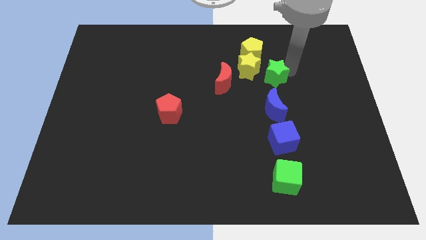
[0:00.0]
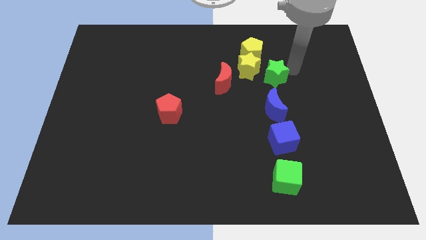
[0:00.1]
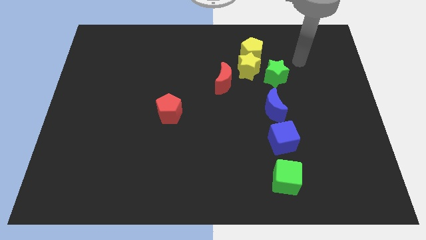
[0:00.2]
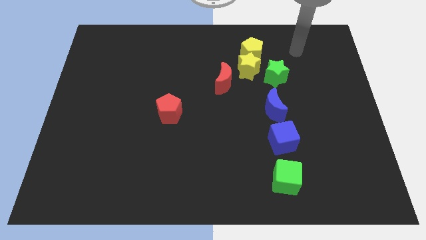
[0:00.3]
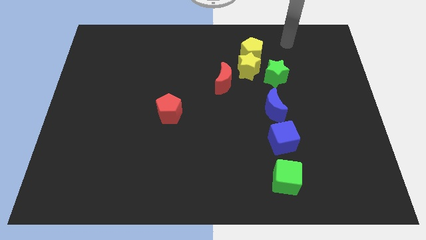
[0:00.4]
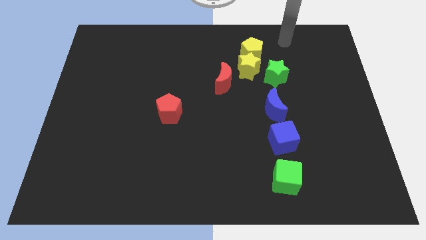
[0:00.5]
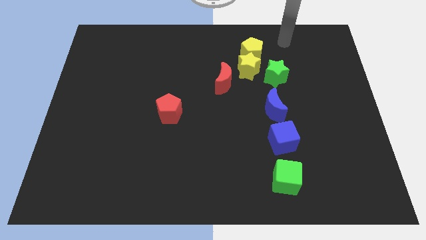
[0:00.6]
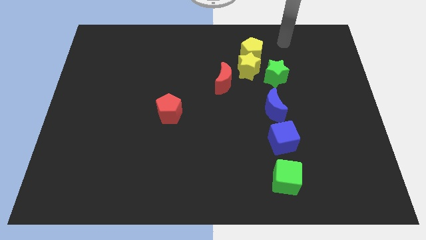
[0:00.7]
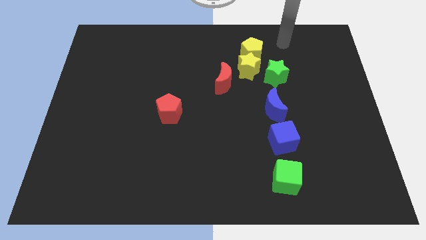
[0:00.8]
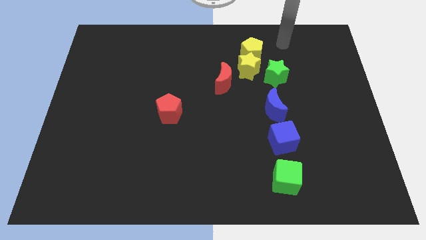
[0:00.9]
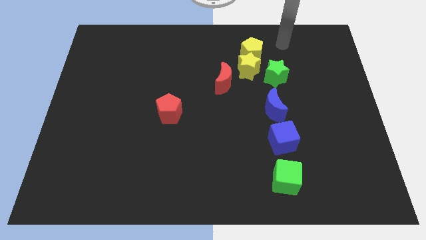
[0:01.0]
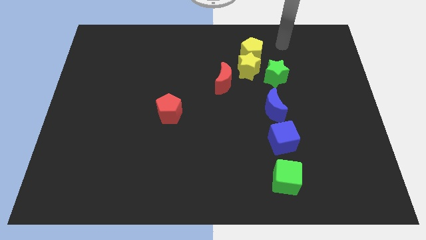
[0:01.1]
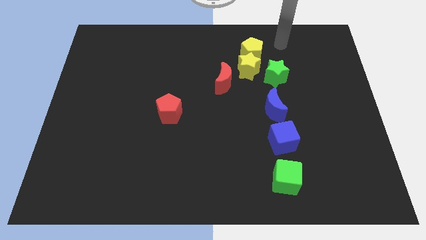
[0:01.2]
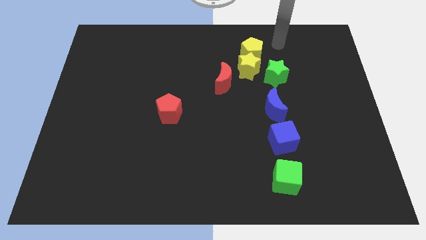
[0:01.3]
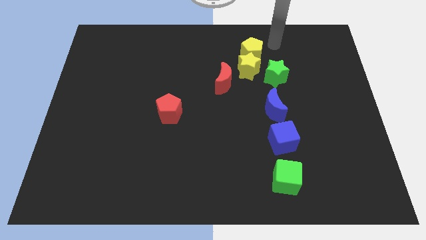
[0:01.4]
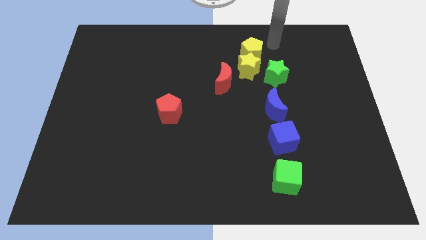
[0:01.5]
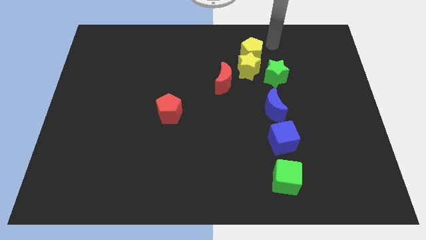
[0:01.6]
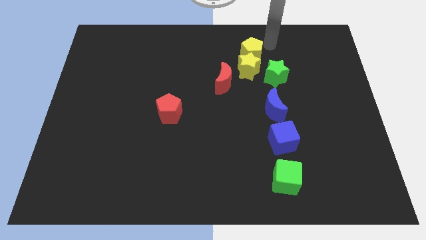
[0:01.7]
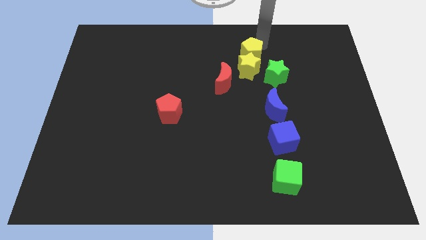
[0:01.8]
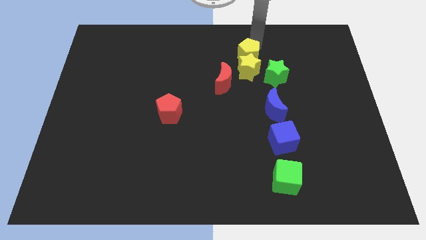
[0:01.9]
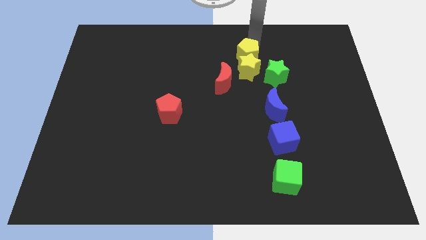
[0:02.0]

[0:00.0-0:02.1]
push the yellow pentagon into yellow star

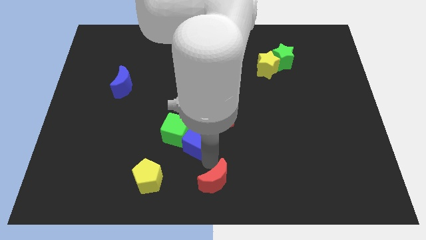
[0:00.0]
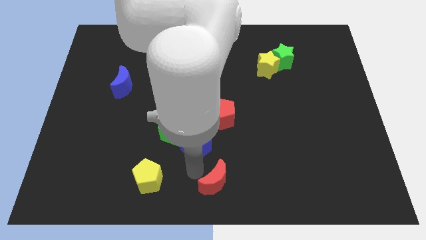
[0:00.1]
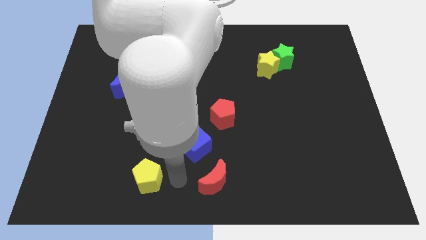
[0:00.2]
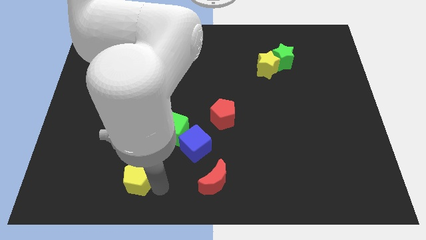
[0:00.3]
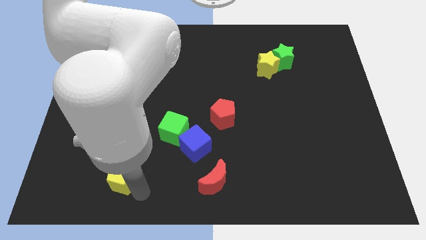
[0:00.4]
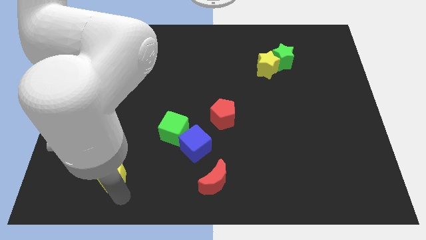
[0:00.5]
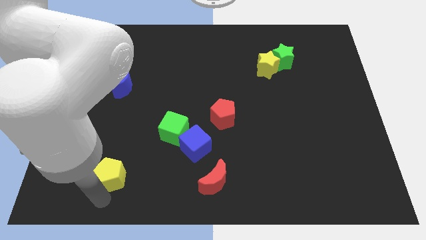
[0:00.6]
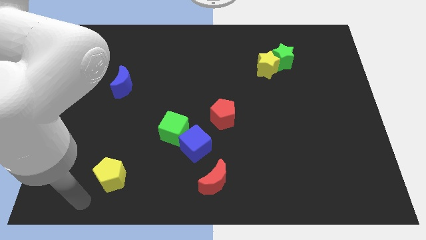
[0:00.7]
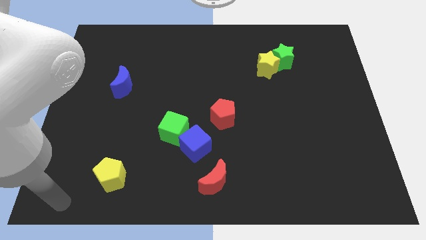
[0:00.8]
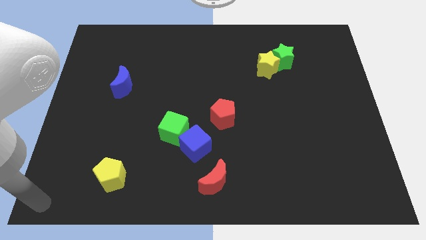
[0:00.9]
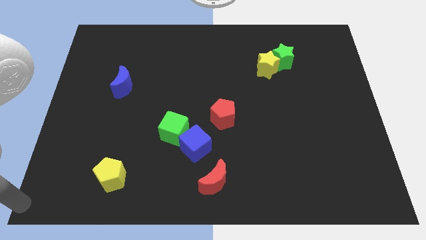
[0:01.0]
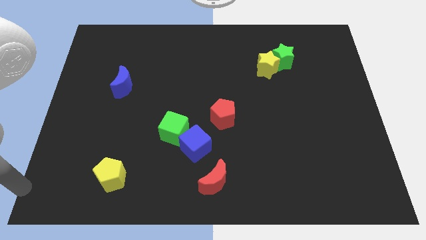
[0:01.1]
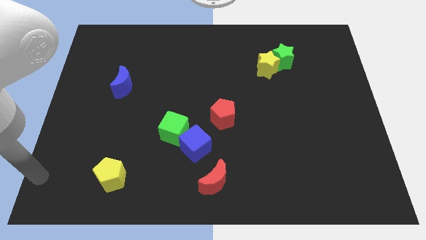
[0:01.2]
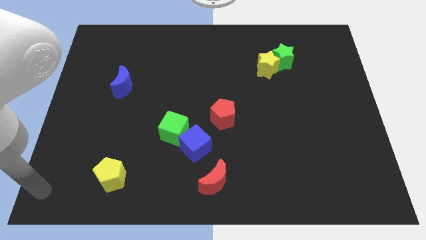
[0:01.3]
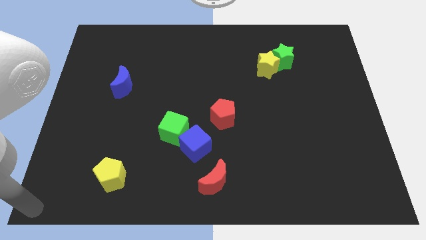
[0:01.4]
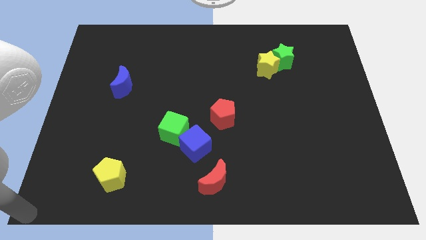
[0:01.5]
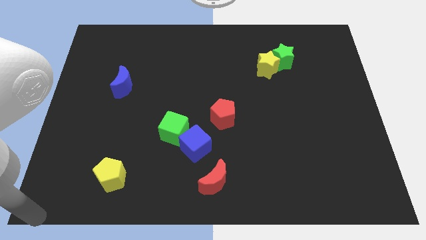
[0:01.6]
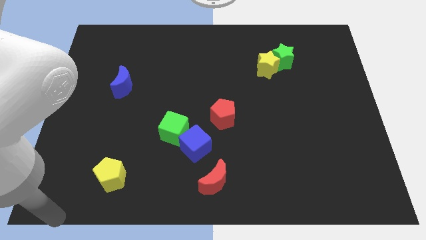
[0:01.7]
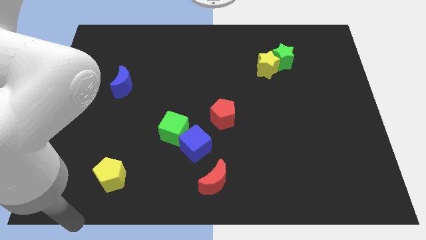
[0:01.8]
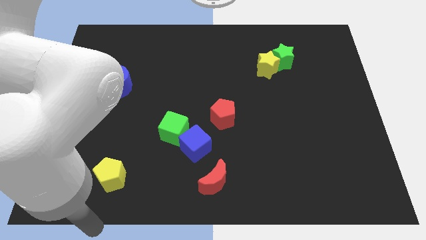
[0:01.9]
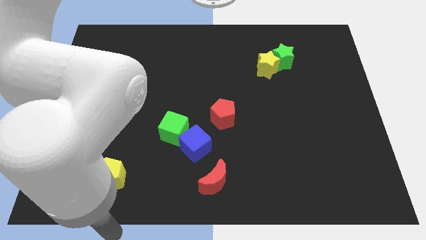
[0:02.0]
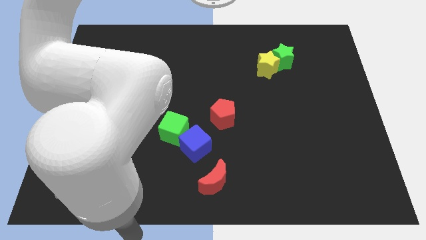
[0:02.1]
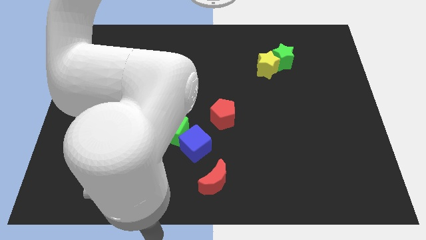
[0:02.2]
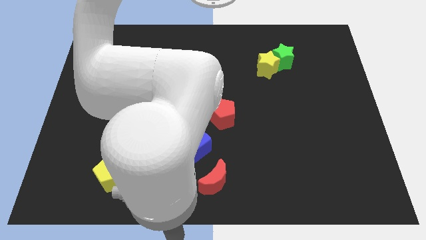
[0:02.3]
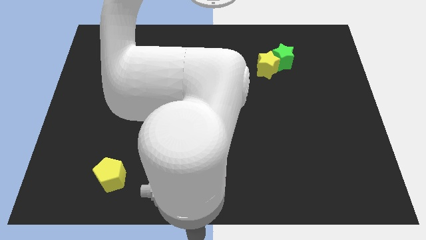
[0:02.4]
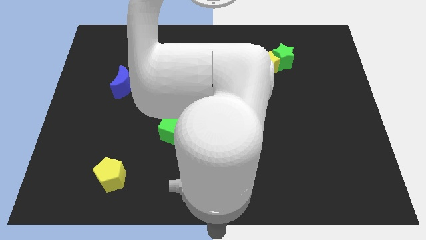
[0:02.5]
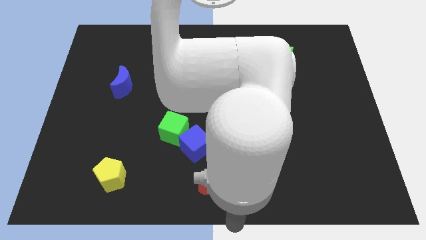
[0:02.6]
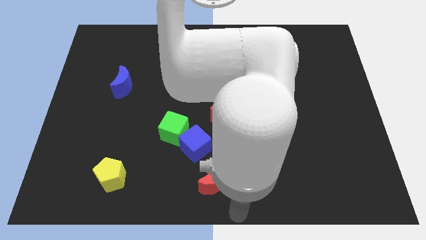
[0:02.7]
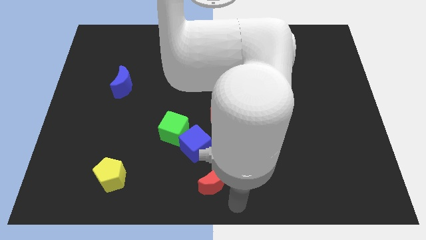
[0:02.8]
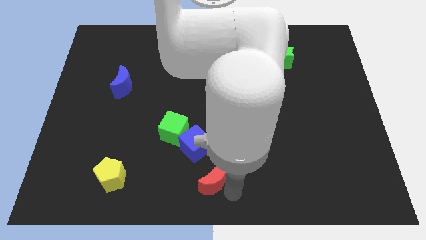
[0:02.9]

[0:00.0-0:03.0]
place arm on the bottom of red moon

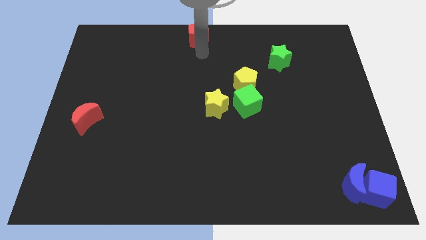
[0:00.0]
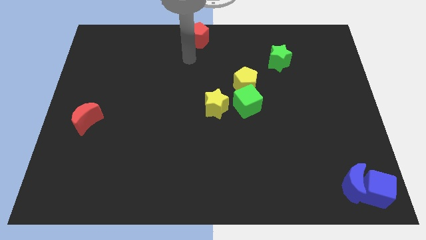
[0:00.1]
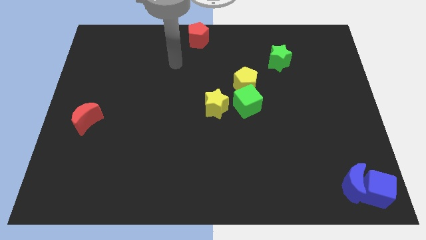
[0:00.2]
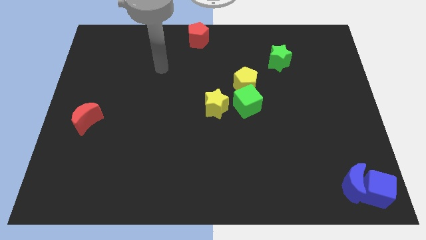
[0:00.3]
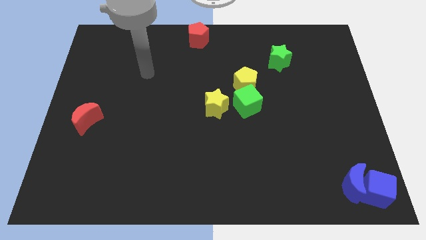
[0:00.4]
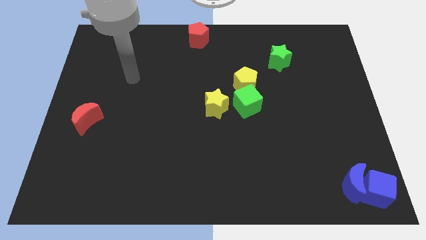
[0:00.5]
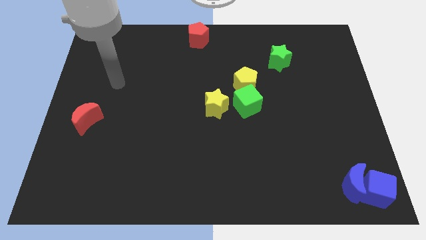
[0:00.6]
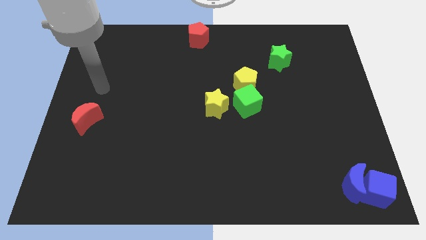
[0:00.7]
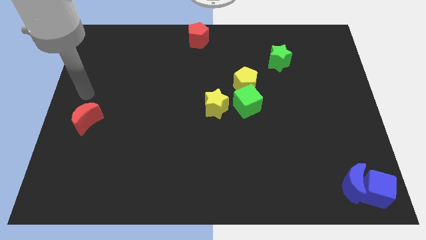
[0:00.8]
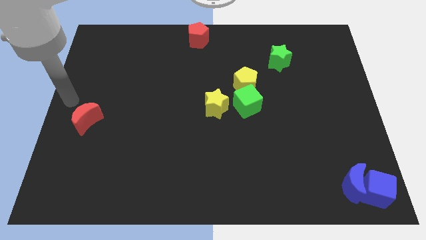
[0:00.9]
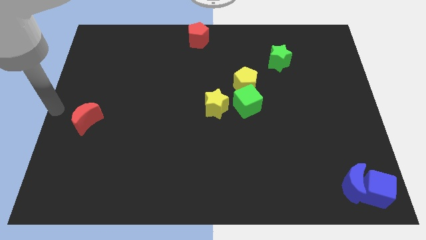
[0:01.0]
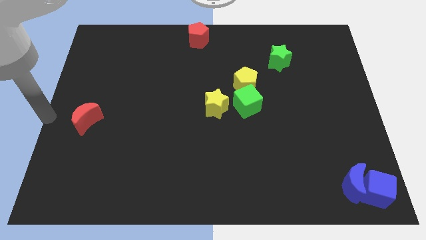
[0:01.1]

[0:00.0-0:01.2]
move yourself away from red pentagon

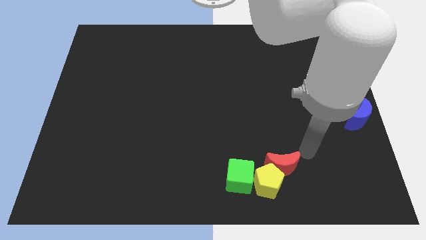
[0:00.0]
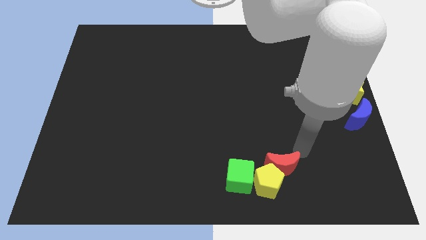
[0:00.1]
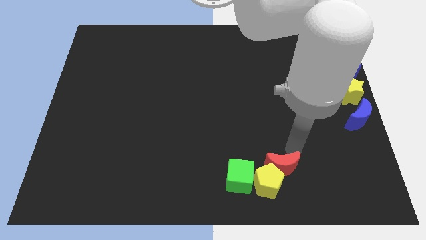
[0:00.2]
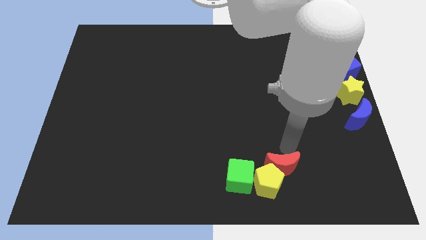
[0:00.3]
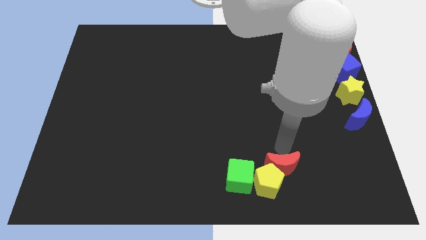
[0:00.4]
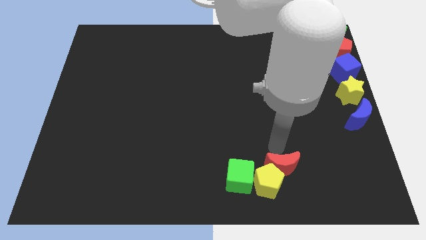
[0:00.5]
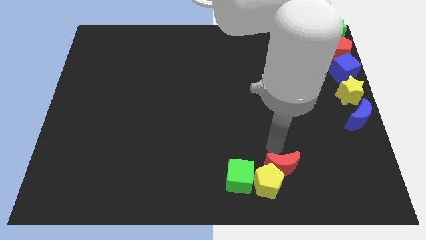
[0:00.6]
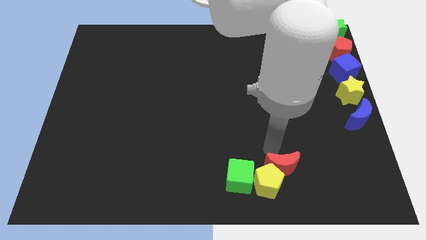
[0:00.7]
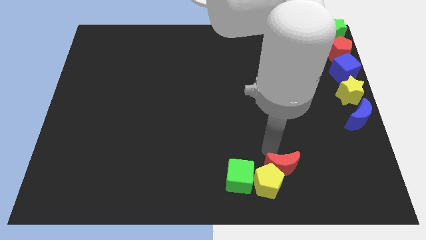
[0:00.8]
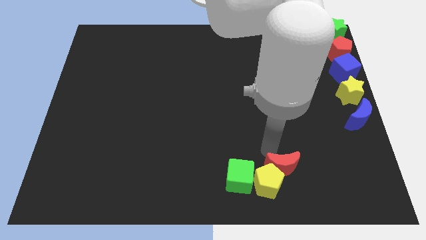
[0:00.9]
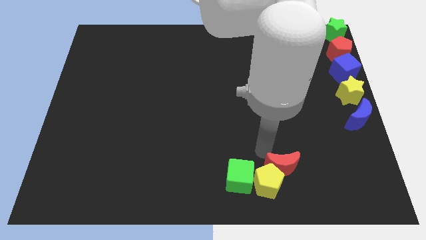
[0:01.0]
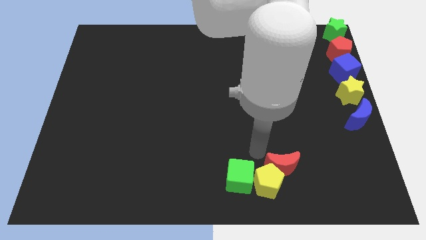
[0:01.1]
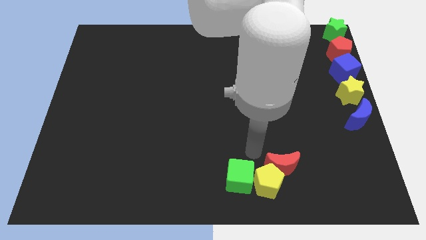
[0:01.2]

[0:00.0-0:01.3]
move the arm towards the red crescent

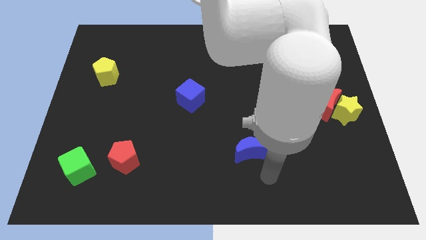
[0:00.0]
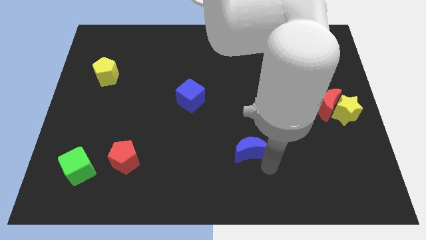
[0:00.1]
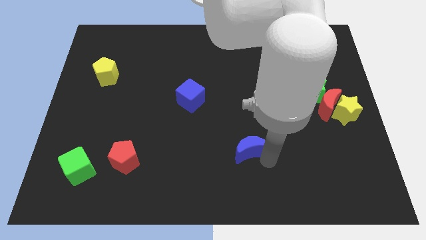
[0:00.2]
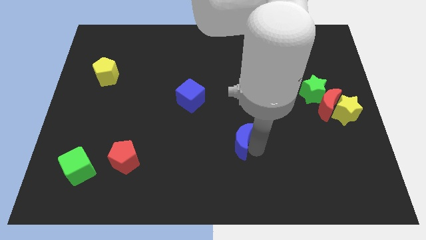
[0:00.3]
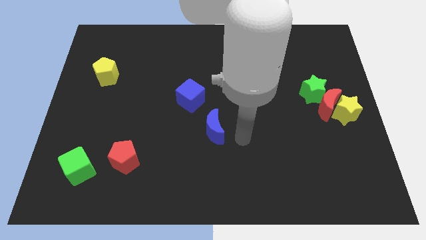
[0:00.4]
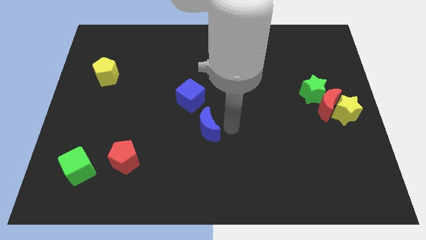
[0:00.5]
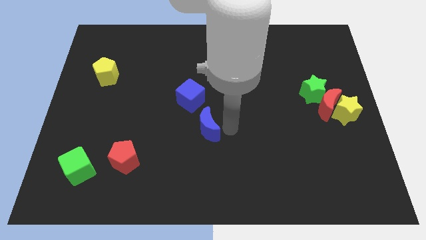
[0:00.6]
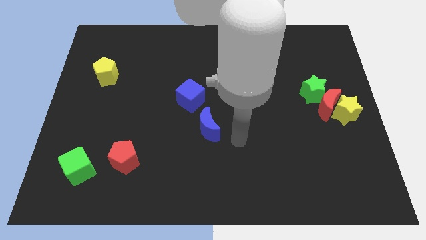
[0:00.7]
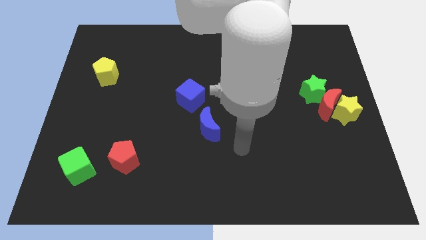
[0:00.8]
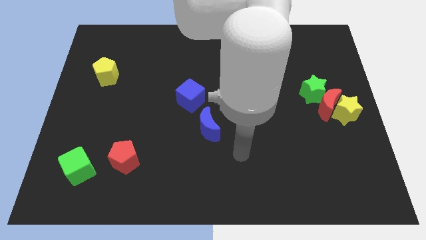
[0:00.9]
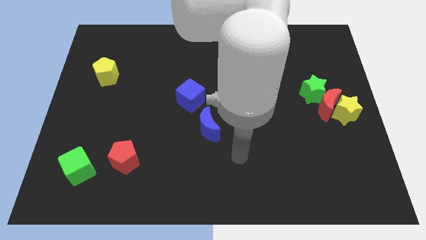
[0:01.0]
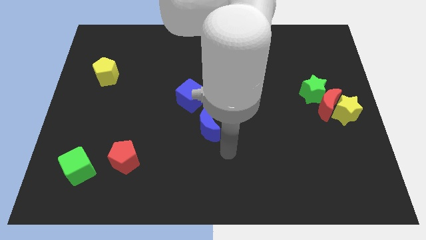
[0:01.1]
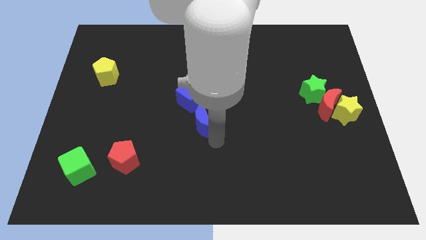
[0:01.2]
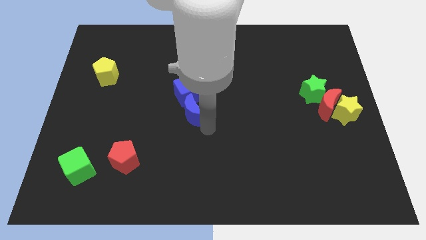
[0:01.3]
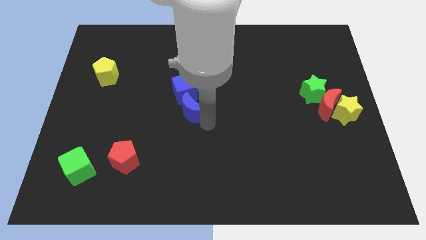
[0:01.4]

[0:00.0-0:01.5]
push blue crescent below blue cube
